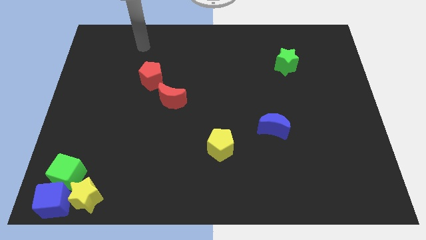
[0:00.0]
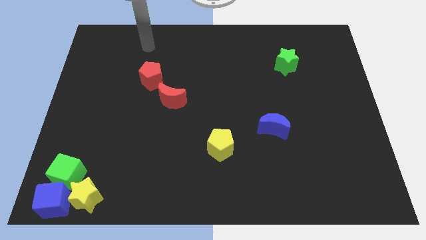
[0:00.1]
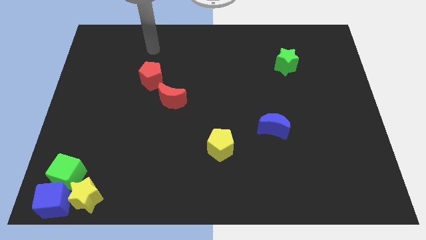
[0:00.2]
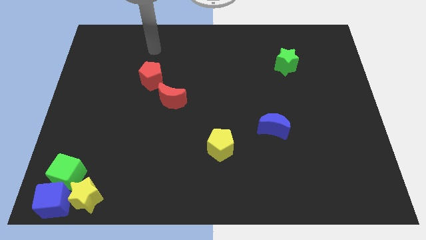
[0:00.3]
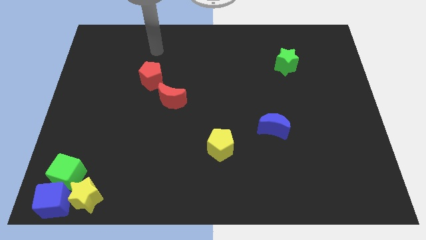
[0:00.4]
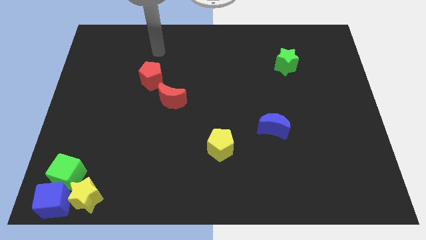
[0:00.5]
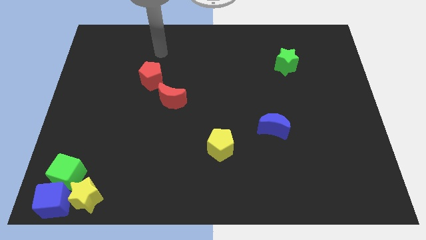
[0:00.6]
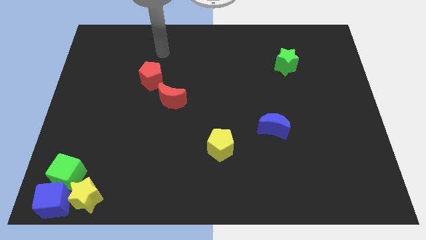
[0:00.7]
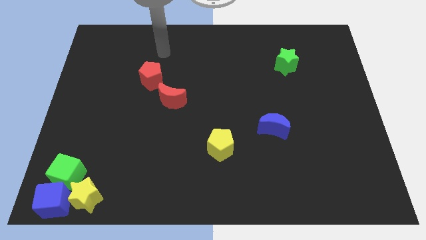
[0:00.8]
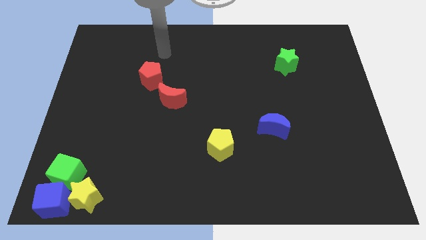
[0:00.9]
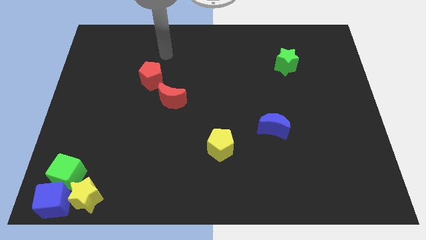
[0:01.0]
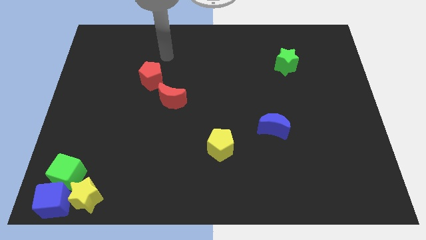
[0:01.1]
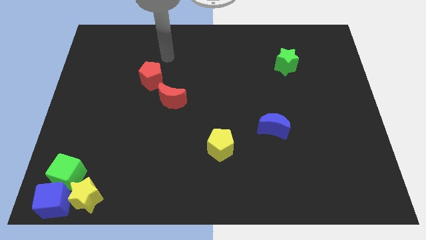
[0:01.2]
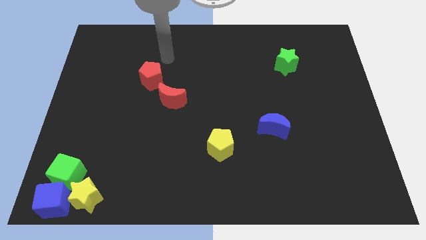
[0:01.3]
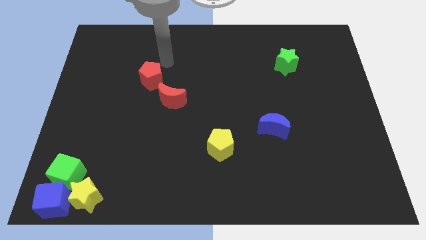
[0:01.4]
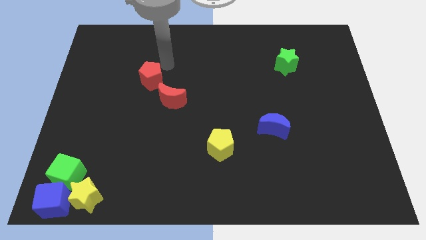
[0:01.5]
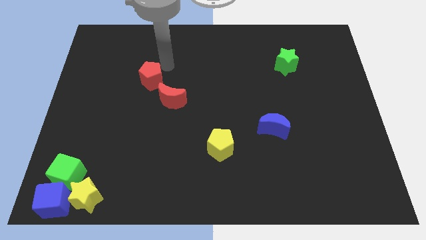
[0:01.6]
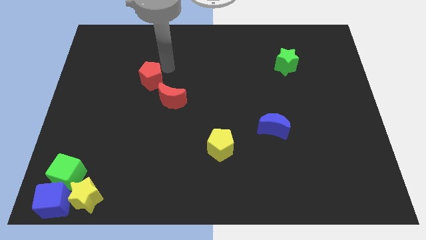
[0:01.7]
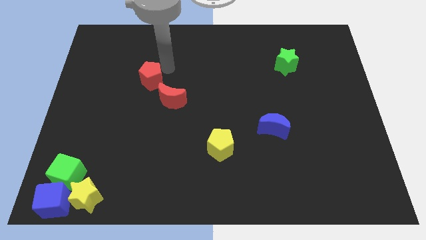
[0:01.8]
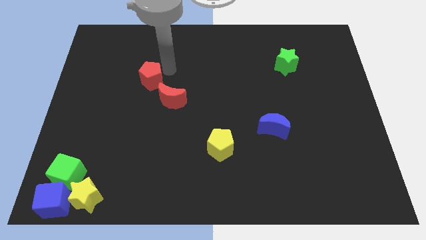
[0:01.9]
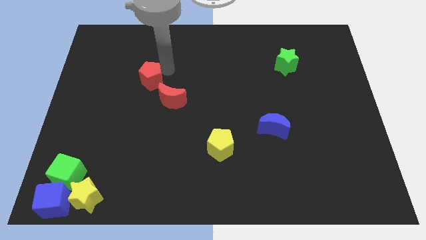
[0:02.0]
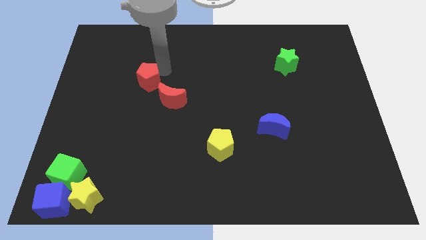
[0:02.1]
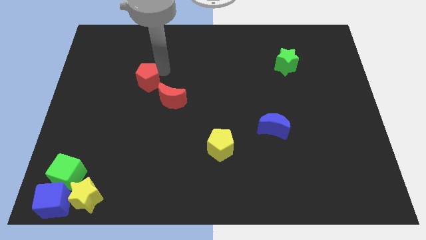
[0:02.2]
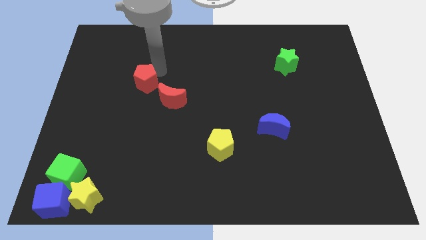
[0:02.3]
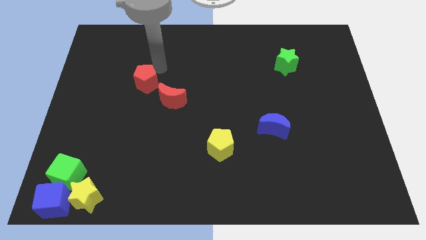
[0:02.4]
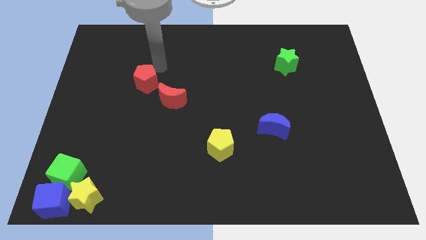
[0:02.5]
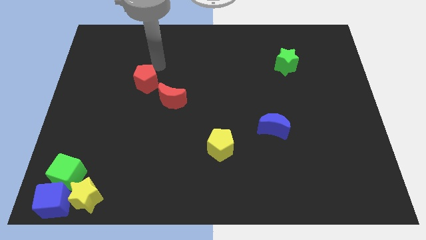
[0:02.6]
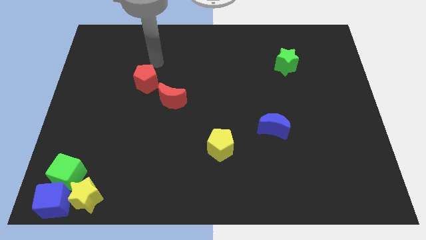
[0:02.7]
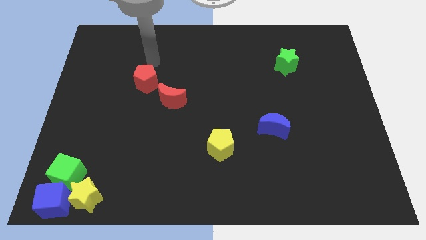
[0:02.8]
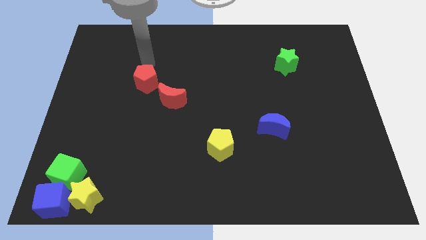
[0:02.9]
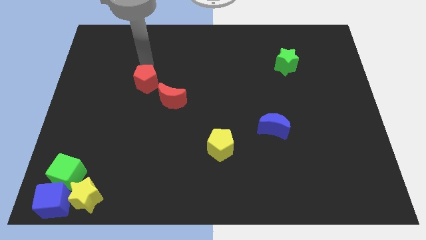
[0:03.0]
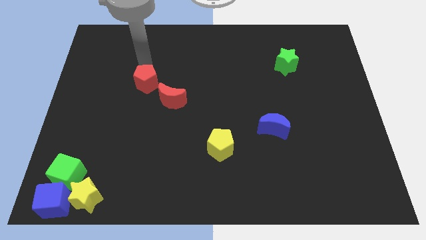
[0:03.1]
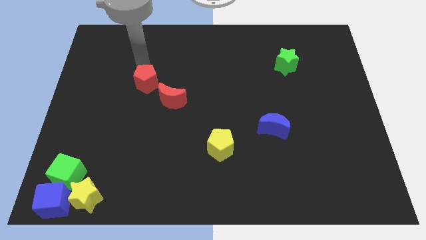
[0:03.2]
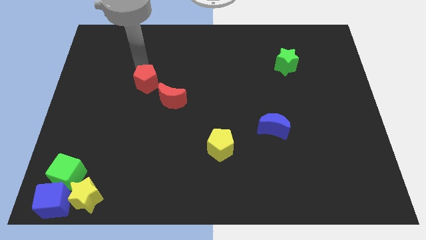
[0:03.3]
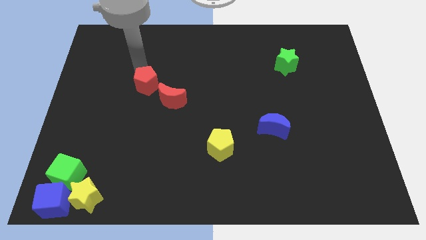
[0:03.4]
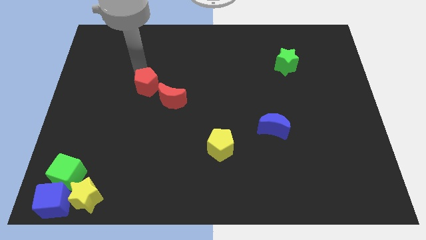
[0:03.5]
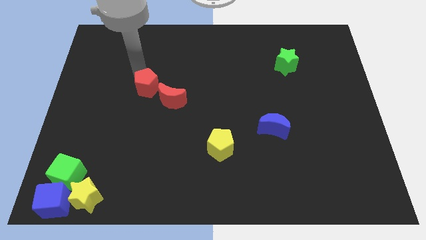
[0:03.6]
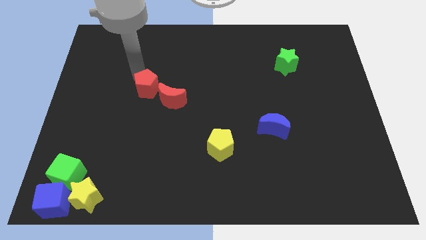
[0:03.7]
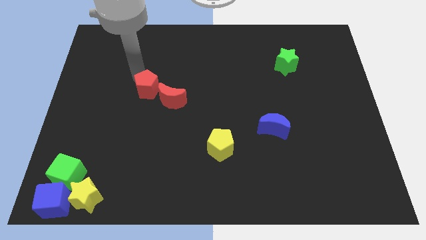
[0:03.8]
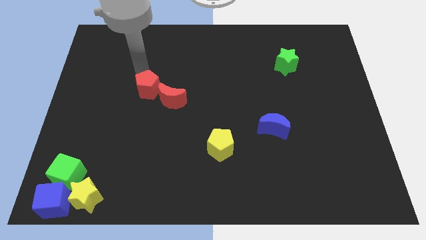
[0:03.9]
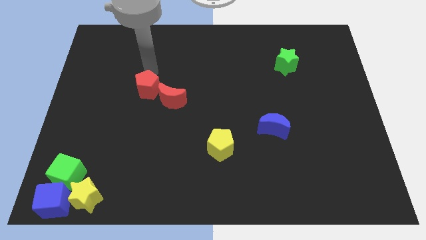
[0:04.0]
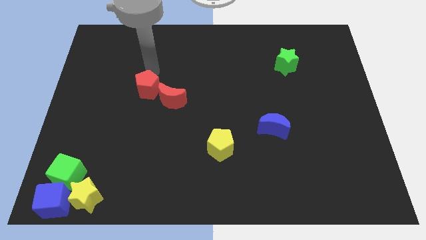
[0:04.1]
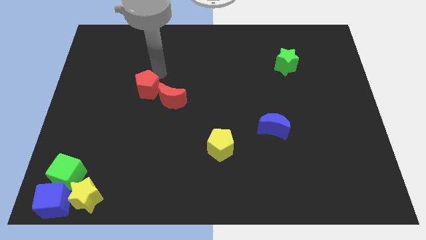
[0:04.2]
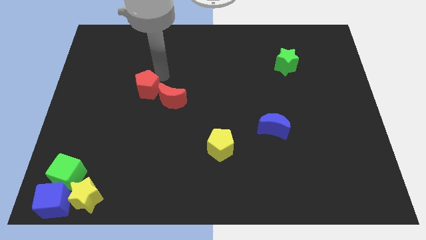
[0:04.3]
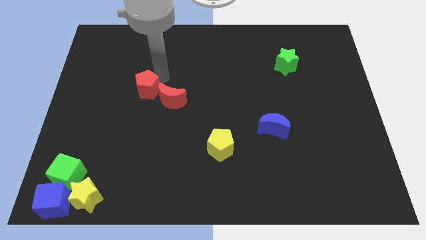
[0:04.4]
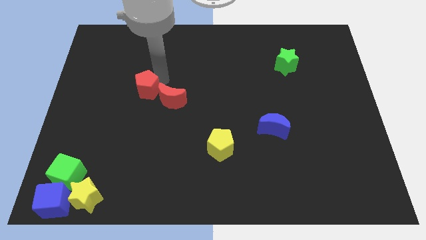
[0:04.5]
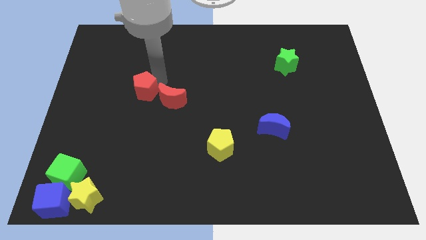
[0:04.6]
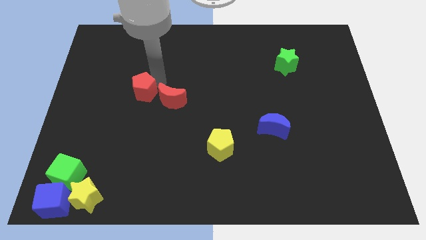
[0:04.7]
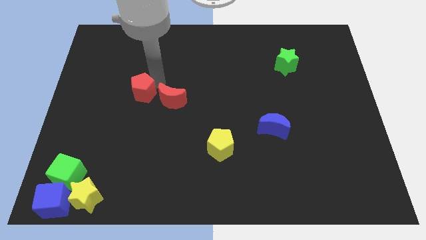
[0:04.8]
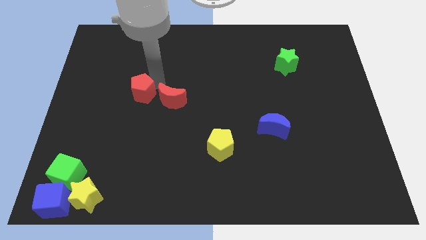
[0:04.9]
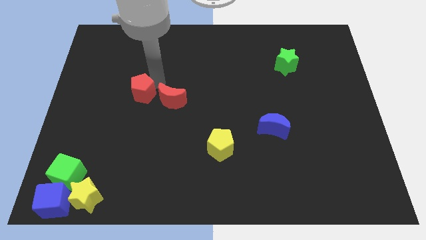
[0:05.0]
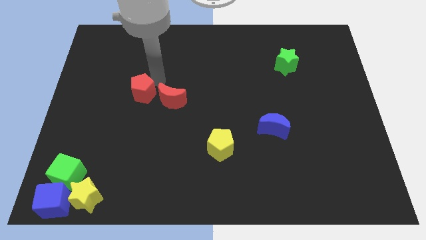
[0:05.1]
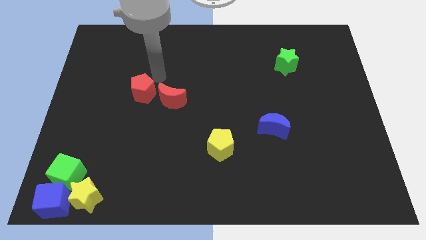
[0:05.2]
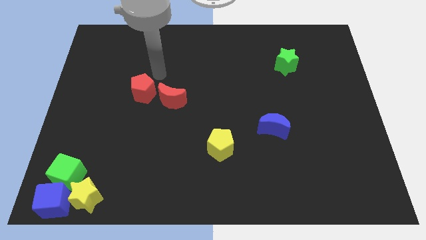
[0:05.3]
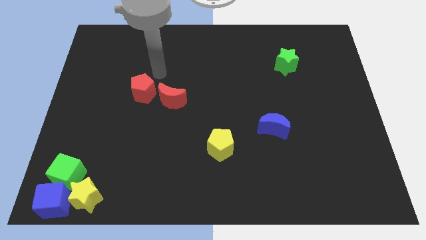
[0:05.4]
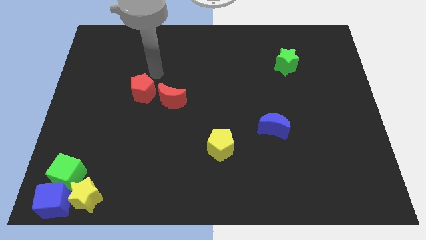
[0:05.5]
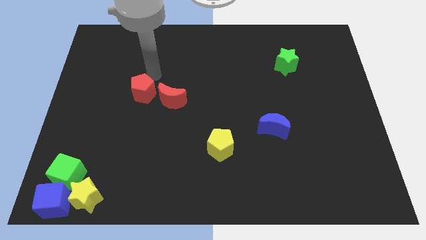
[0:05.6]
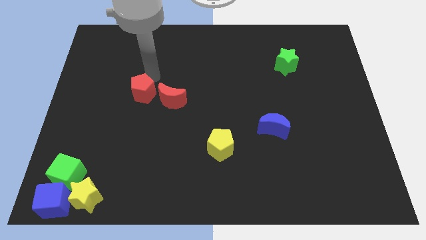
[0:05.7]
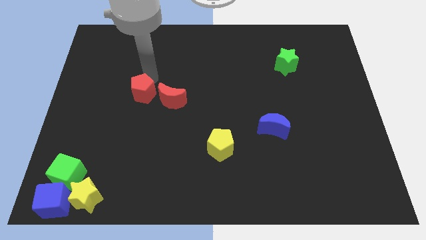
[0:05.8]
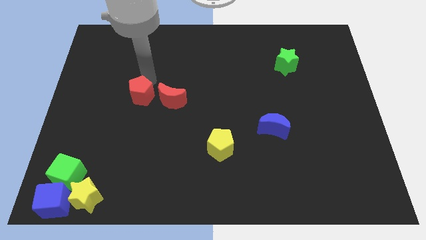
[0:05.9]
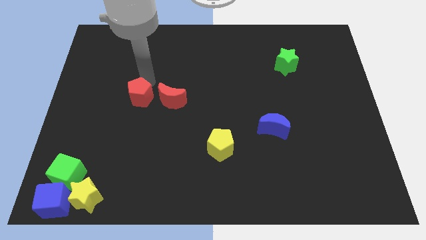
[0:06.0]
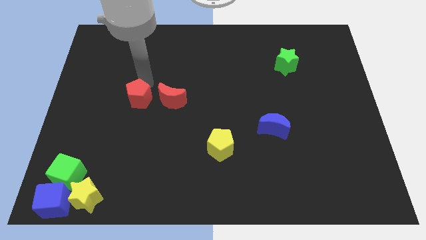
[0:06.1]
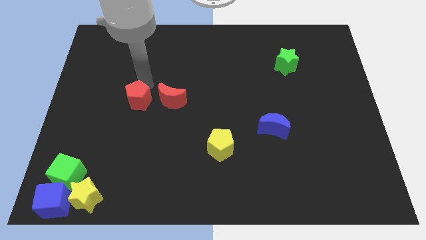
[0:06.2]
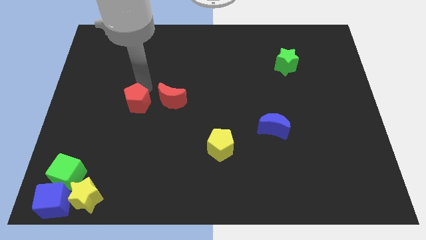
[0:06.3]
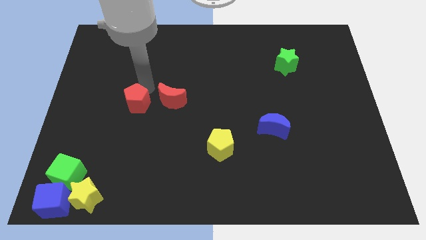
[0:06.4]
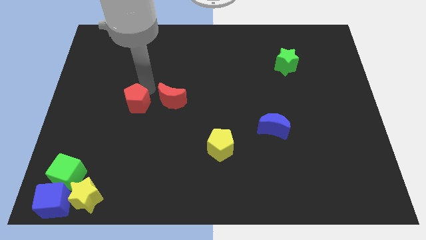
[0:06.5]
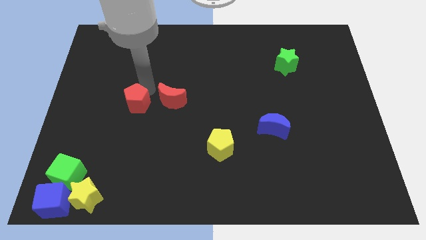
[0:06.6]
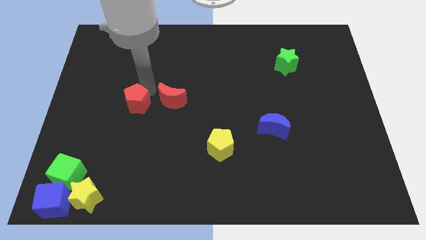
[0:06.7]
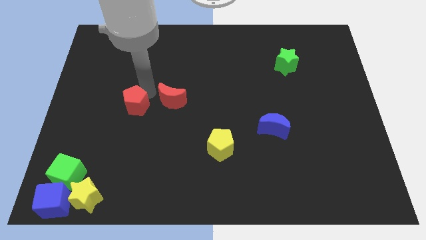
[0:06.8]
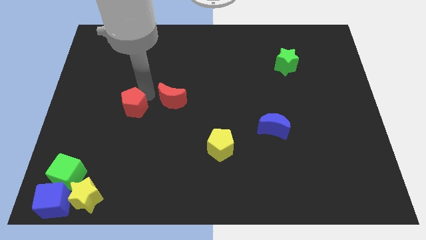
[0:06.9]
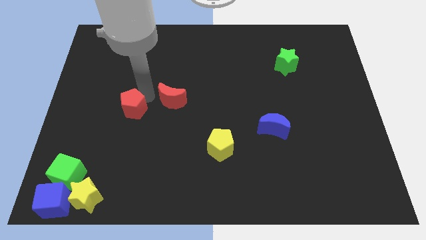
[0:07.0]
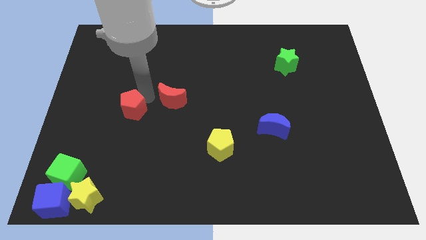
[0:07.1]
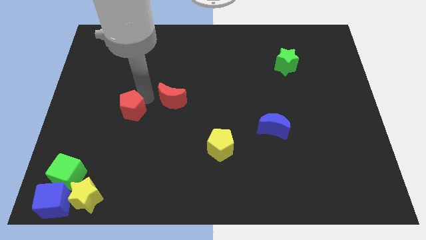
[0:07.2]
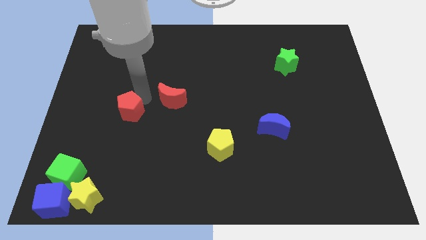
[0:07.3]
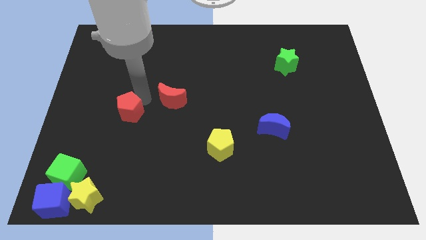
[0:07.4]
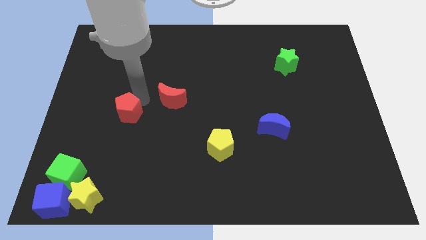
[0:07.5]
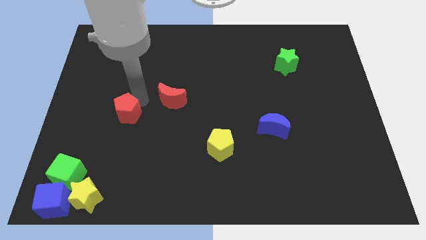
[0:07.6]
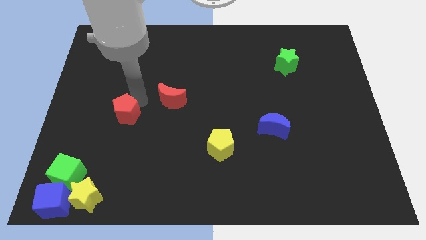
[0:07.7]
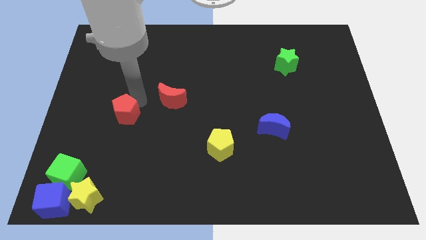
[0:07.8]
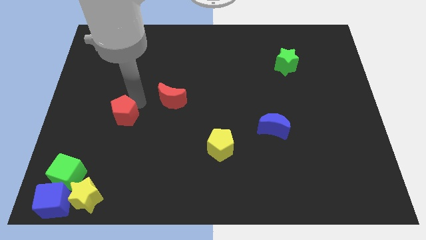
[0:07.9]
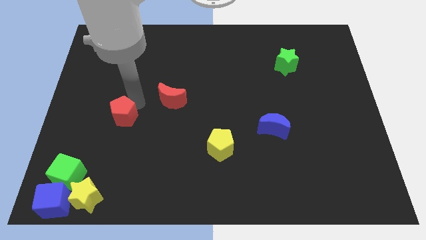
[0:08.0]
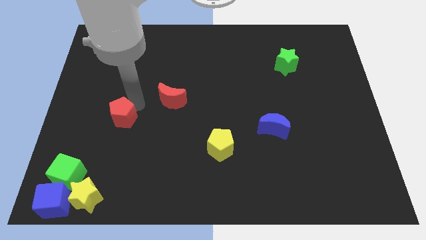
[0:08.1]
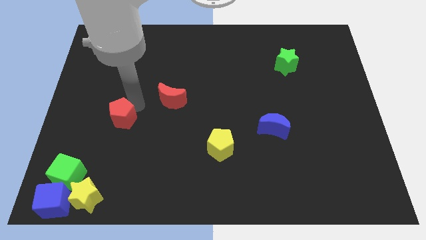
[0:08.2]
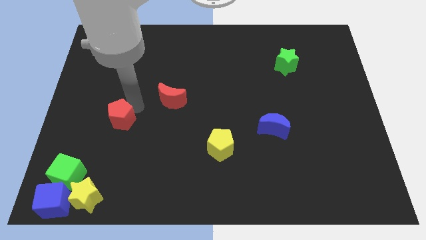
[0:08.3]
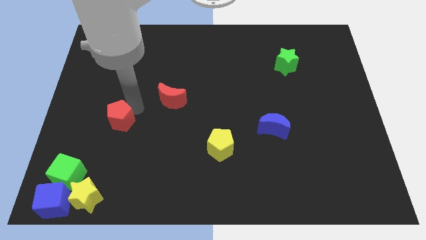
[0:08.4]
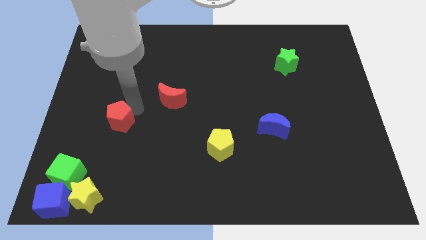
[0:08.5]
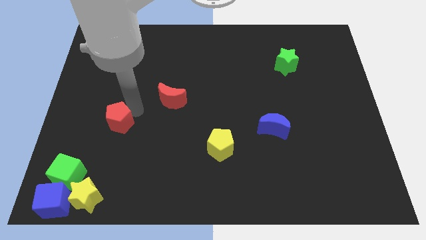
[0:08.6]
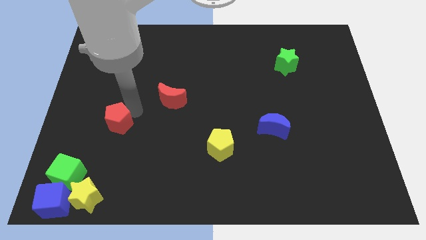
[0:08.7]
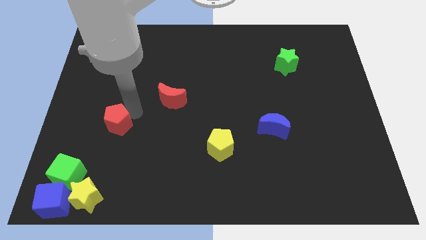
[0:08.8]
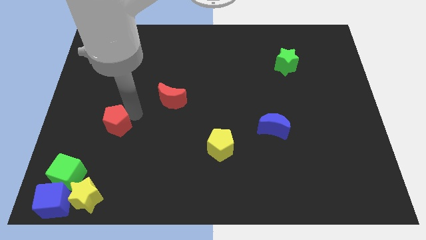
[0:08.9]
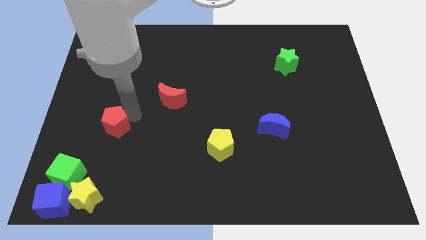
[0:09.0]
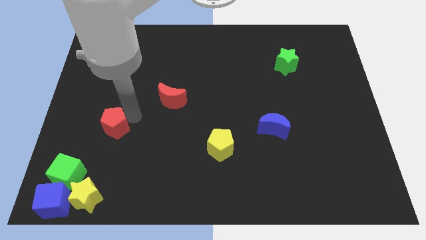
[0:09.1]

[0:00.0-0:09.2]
push the red pentagon towards the green cube
